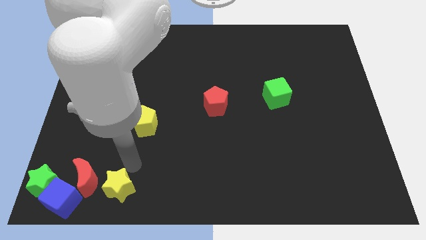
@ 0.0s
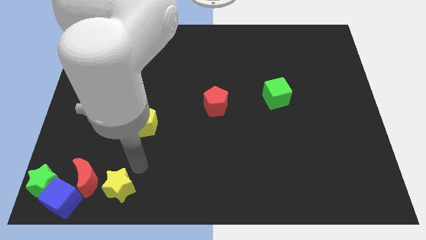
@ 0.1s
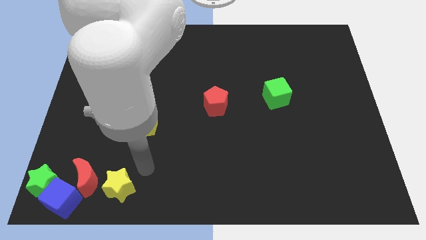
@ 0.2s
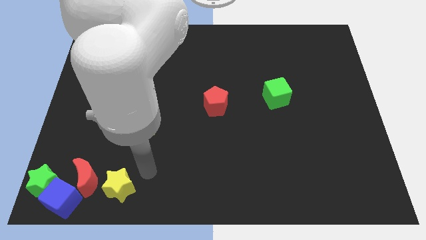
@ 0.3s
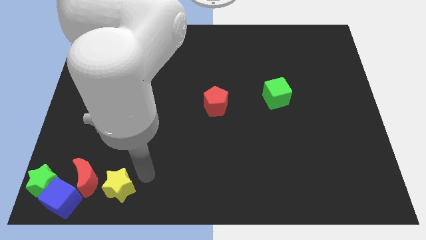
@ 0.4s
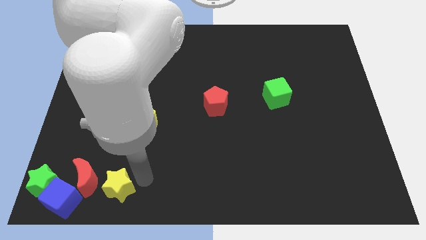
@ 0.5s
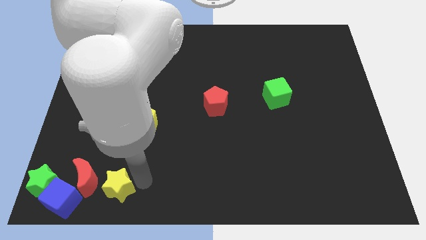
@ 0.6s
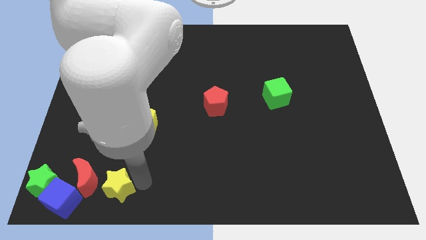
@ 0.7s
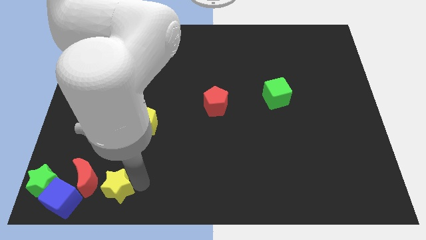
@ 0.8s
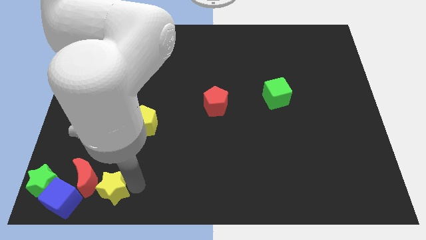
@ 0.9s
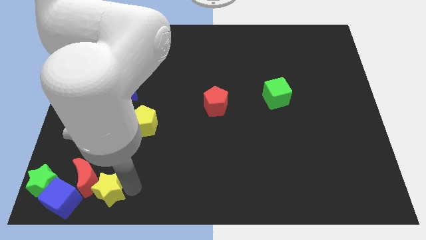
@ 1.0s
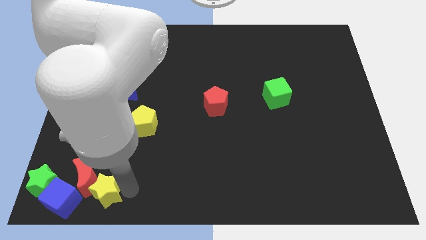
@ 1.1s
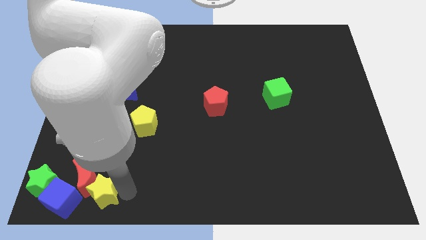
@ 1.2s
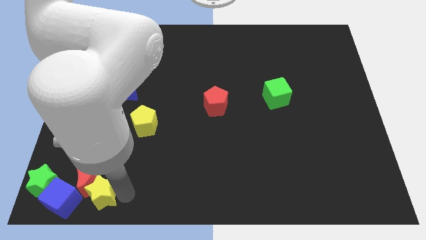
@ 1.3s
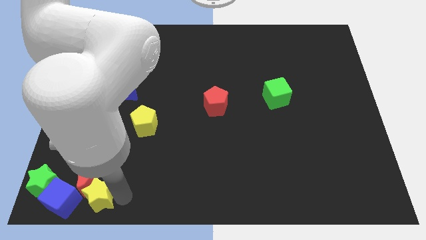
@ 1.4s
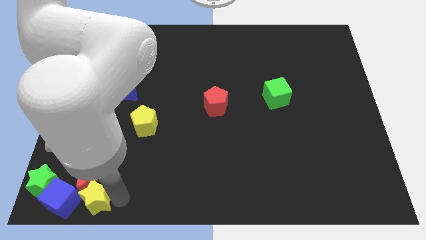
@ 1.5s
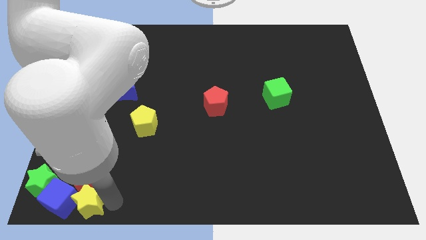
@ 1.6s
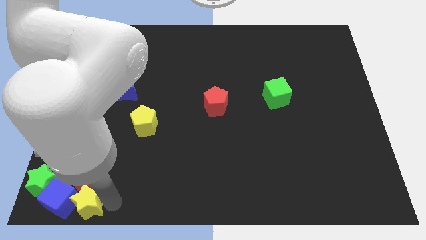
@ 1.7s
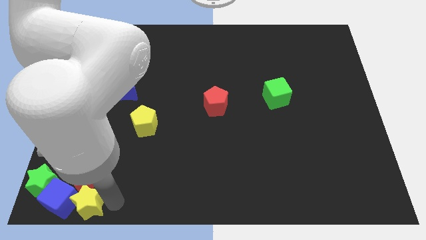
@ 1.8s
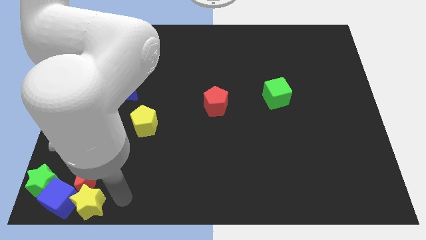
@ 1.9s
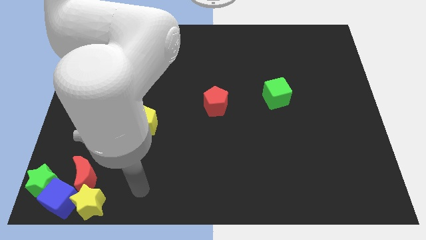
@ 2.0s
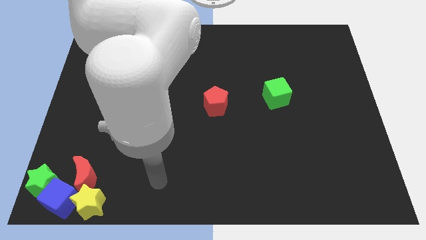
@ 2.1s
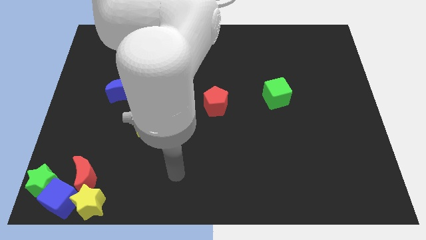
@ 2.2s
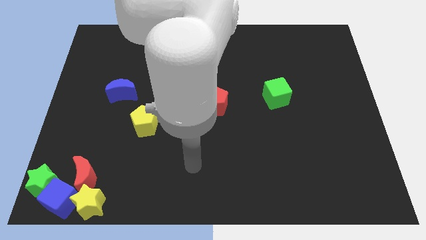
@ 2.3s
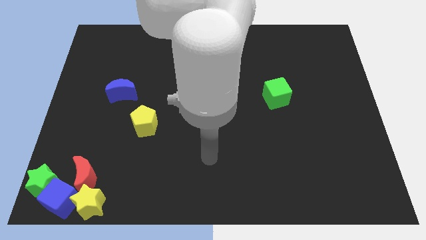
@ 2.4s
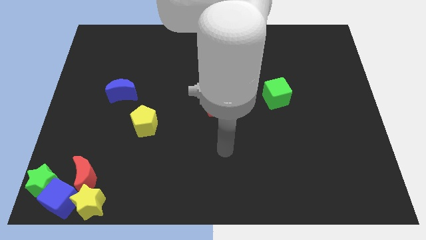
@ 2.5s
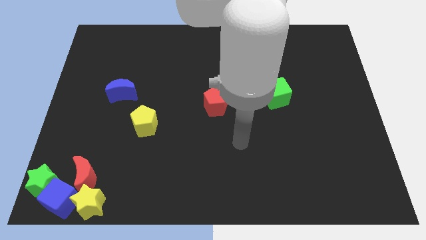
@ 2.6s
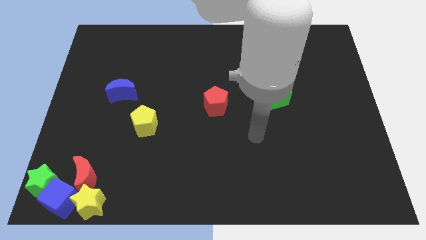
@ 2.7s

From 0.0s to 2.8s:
move yellow star right beside blue cube

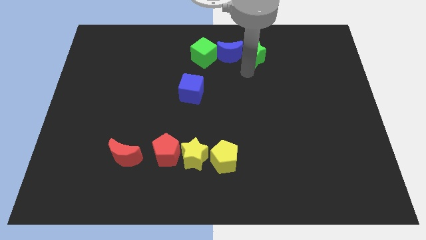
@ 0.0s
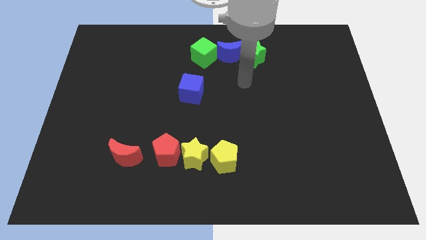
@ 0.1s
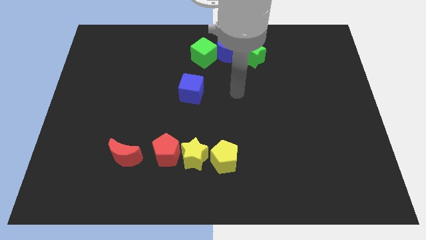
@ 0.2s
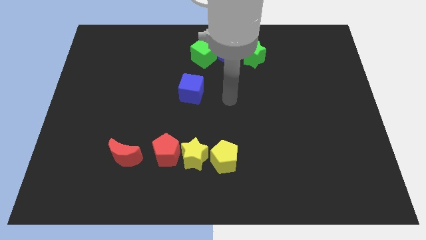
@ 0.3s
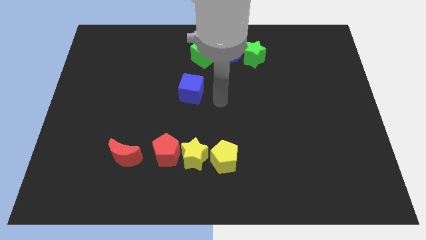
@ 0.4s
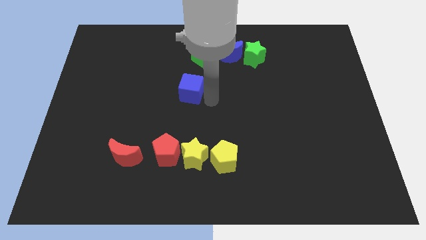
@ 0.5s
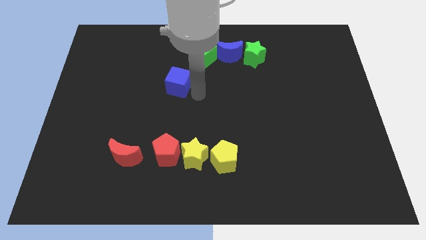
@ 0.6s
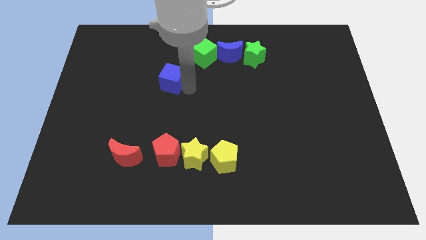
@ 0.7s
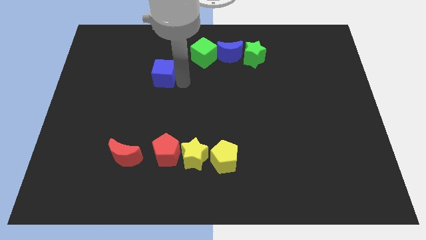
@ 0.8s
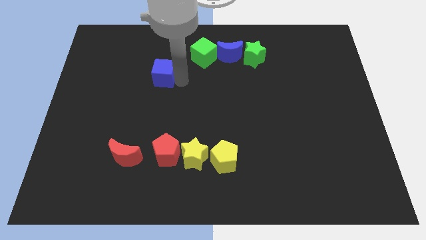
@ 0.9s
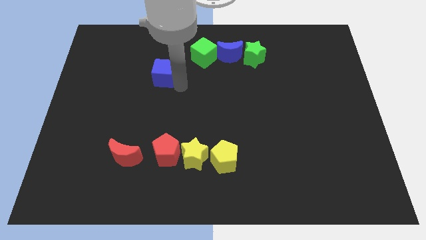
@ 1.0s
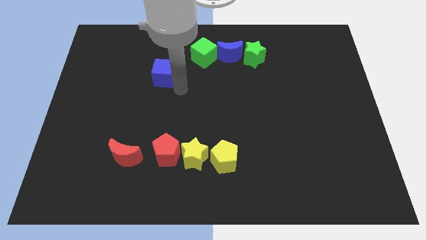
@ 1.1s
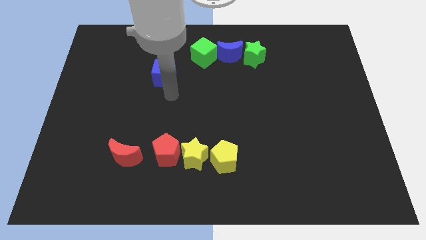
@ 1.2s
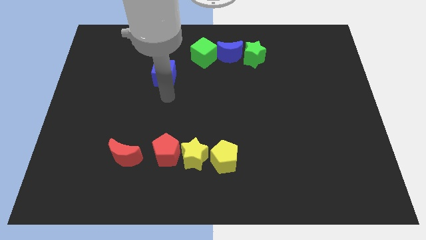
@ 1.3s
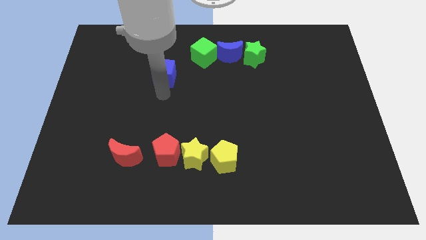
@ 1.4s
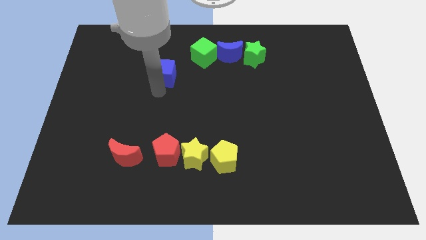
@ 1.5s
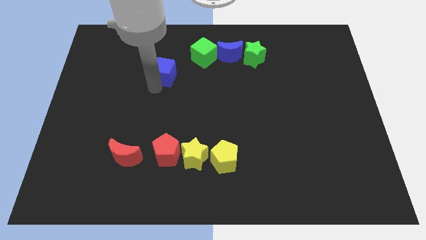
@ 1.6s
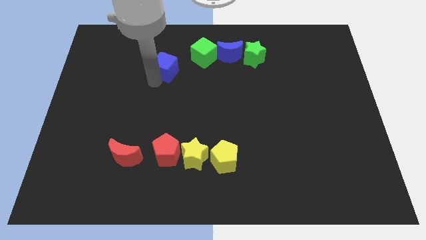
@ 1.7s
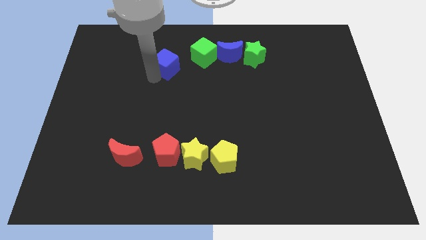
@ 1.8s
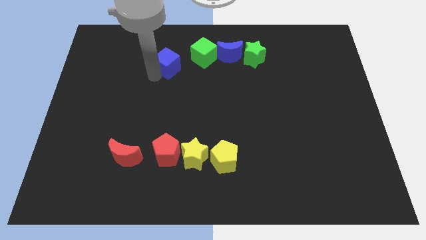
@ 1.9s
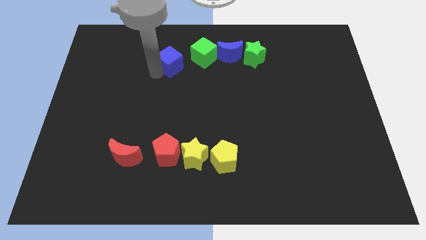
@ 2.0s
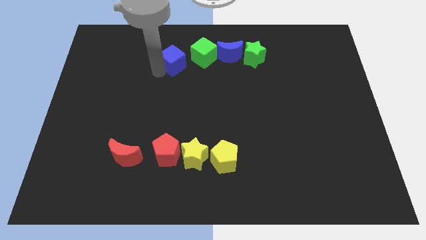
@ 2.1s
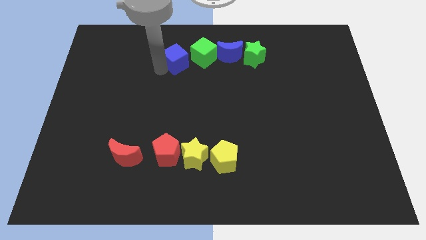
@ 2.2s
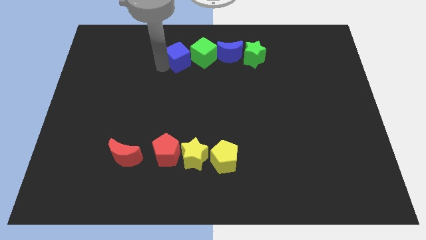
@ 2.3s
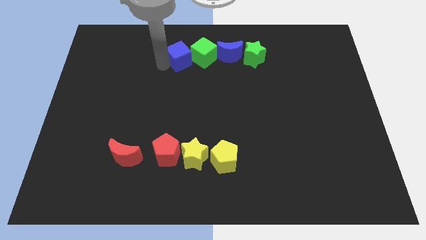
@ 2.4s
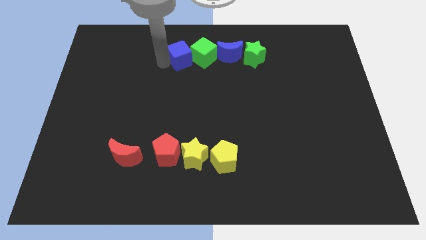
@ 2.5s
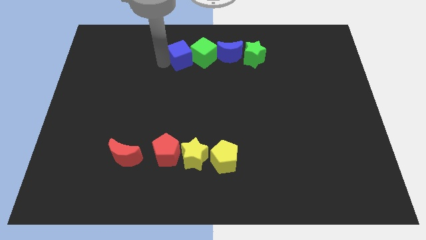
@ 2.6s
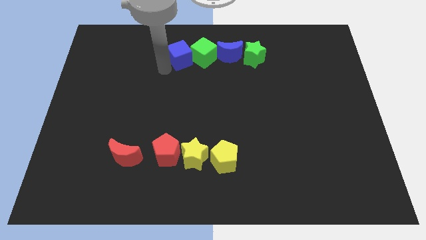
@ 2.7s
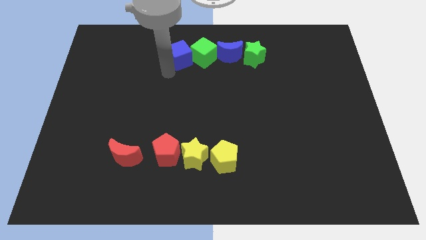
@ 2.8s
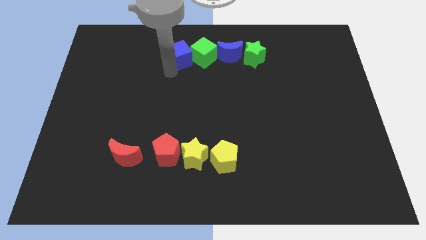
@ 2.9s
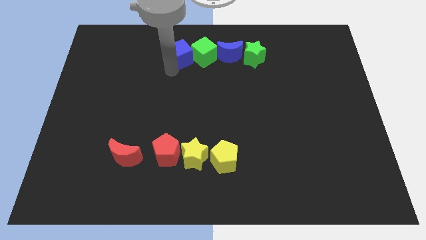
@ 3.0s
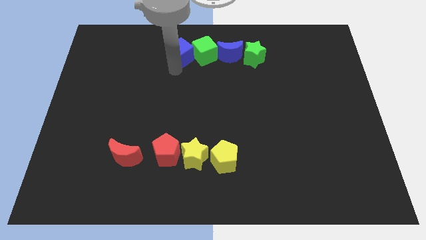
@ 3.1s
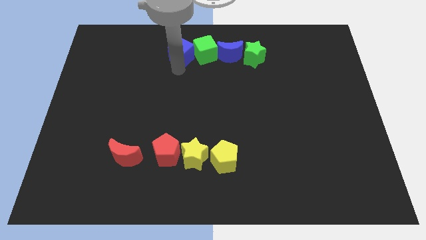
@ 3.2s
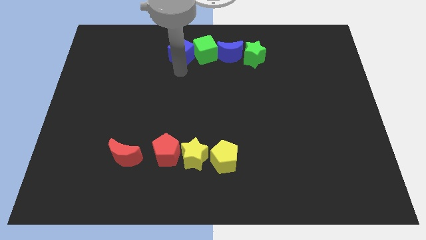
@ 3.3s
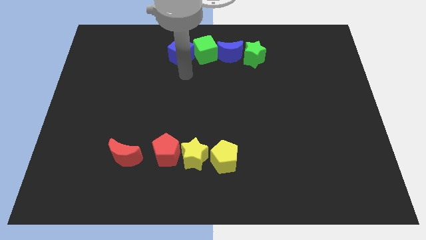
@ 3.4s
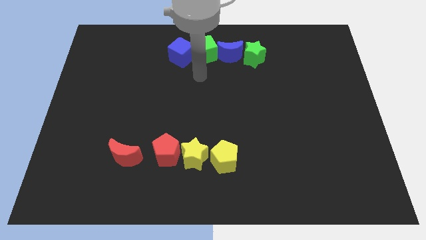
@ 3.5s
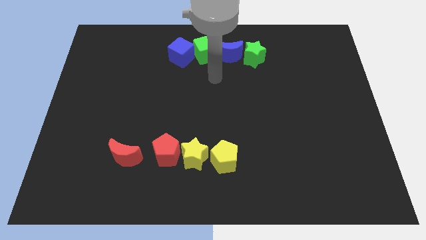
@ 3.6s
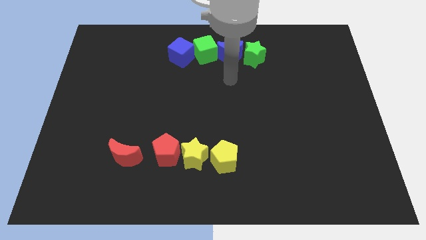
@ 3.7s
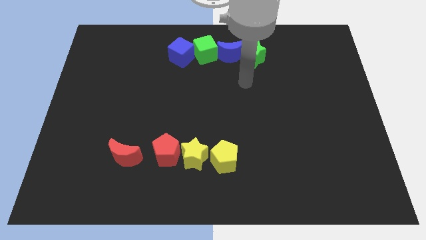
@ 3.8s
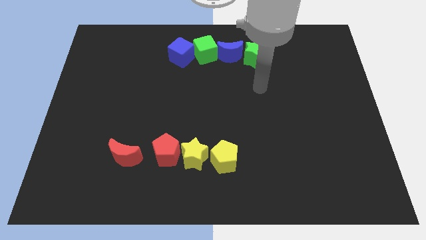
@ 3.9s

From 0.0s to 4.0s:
place blue cube to the left side of the green cube

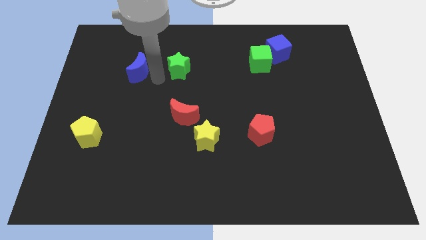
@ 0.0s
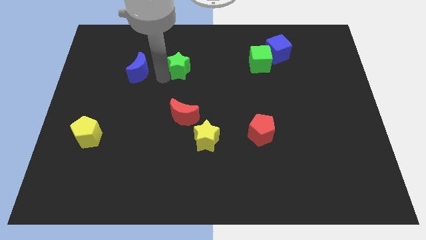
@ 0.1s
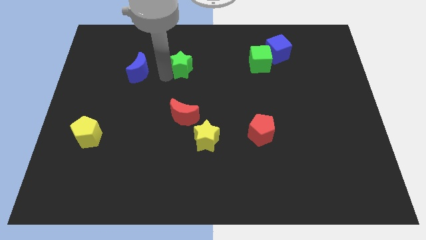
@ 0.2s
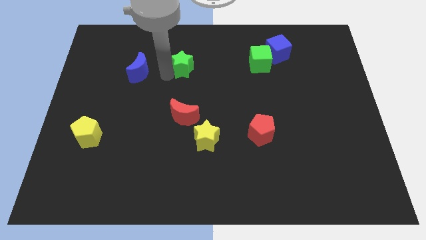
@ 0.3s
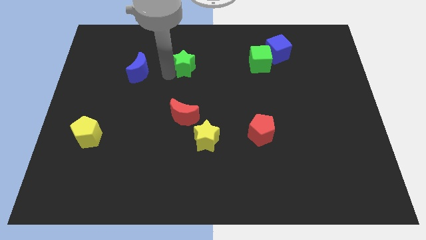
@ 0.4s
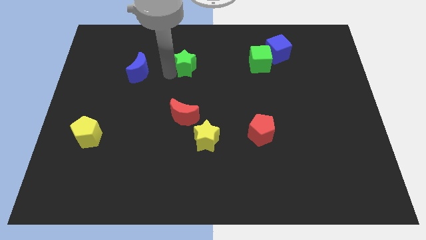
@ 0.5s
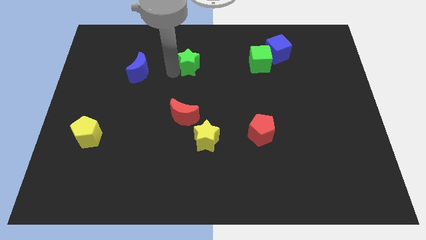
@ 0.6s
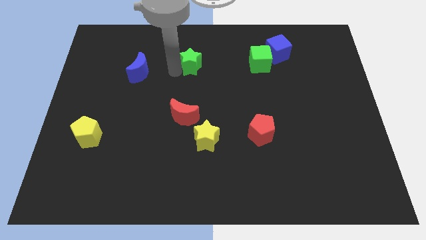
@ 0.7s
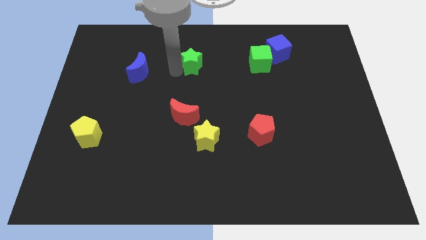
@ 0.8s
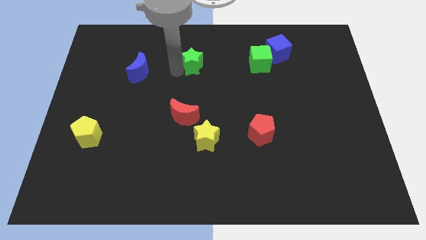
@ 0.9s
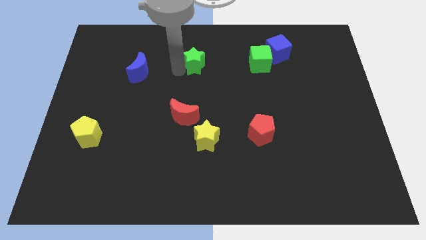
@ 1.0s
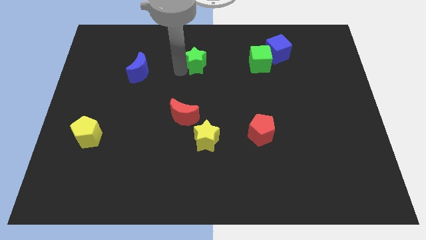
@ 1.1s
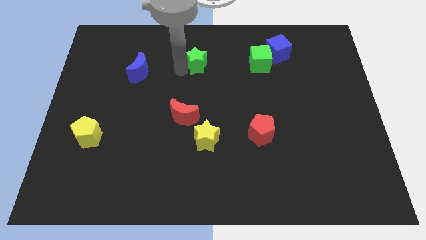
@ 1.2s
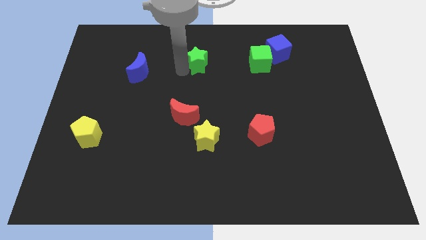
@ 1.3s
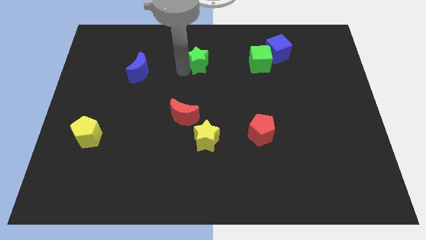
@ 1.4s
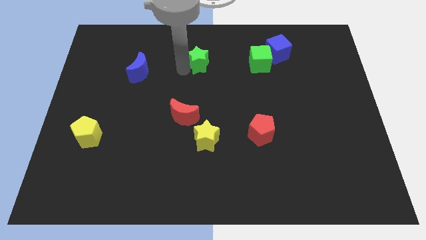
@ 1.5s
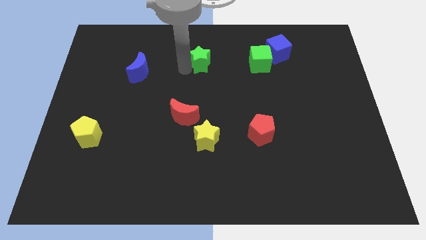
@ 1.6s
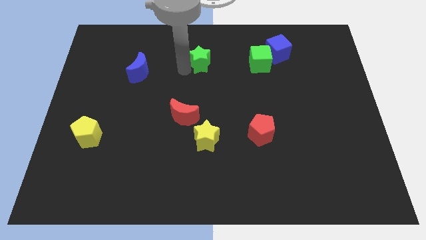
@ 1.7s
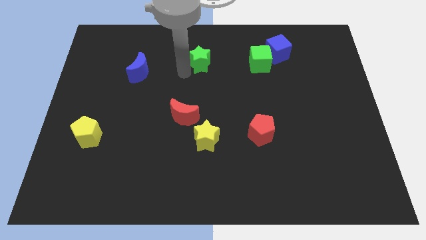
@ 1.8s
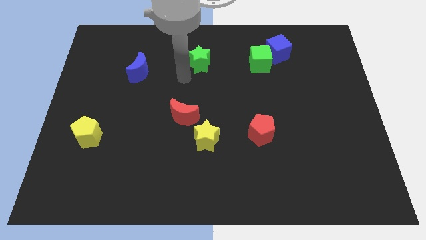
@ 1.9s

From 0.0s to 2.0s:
move the green star to the top center

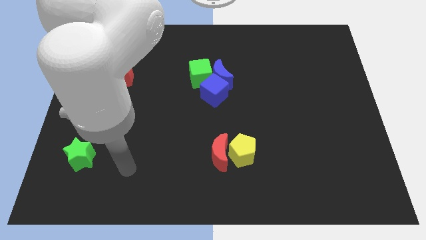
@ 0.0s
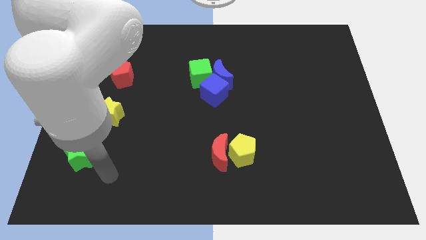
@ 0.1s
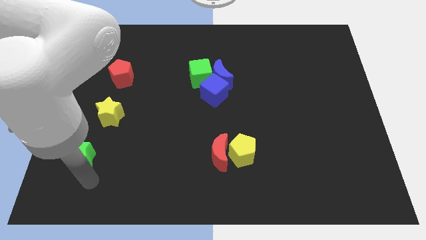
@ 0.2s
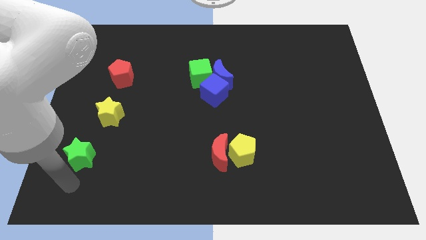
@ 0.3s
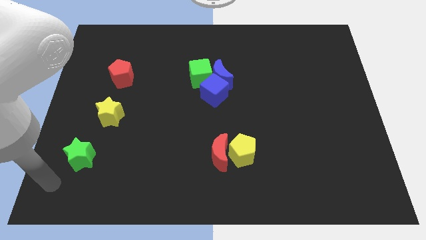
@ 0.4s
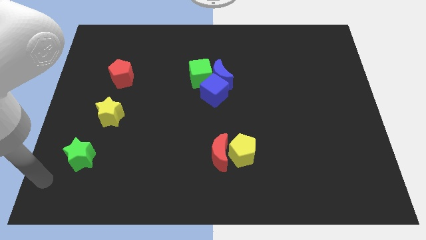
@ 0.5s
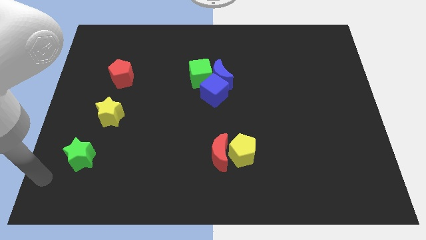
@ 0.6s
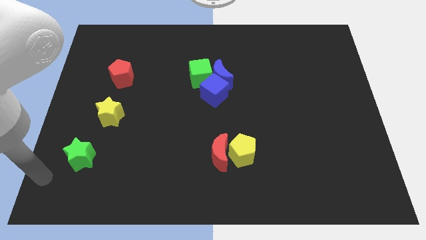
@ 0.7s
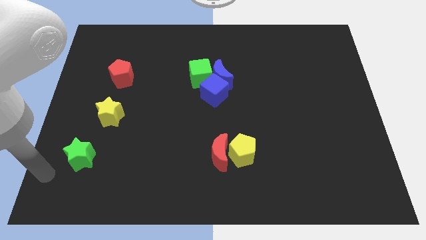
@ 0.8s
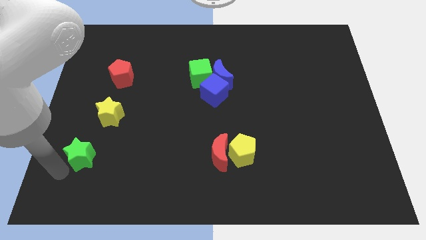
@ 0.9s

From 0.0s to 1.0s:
point the arm to the left bottom of the green star
